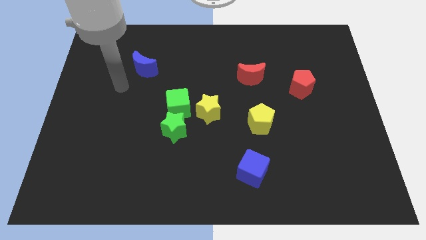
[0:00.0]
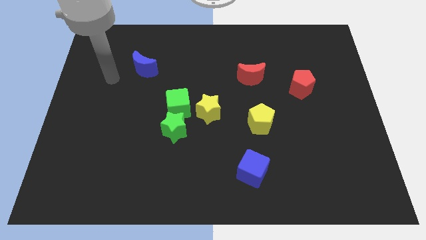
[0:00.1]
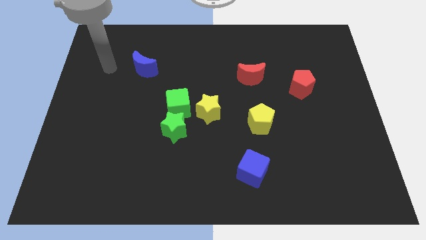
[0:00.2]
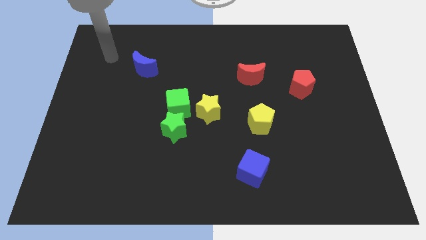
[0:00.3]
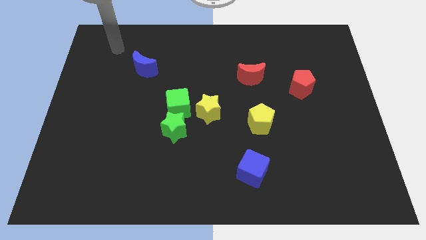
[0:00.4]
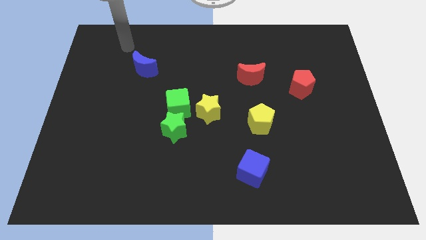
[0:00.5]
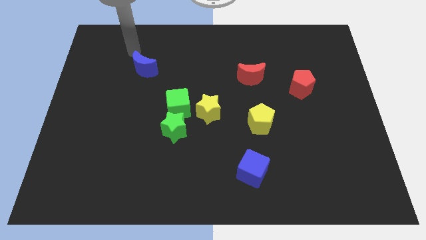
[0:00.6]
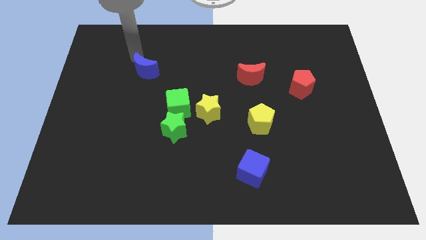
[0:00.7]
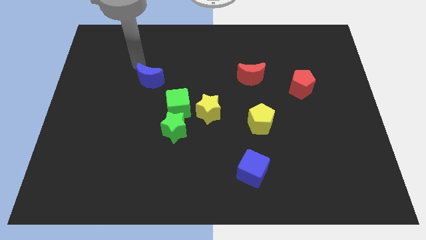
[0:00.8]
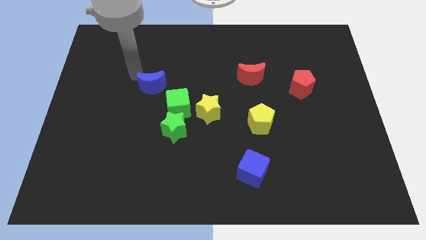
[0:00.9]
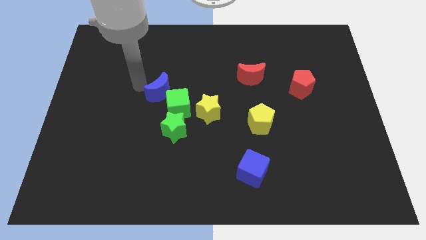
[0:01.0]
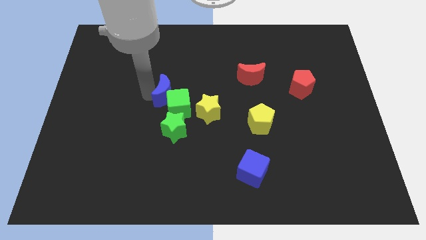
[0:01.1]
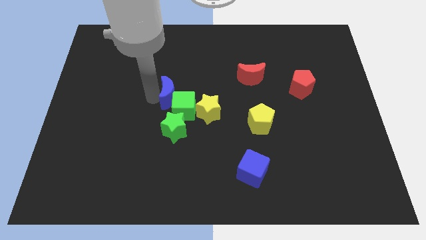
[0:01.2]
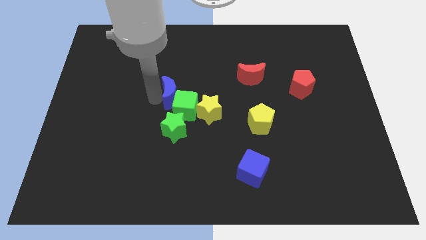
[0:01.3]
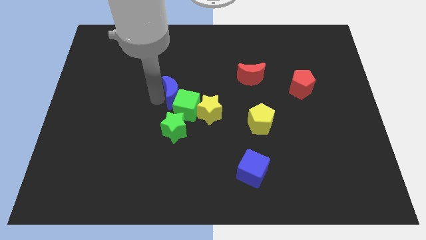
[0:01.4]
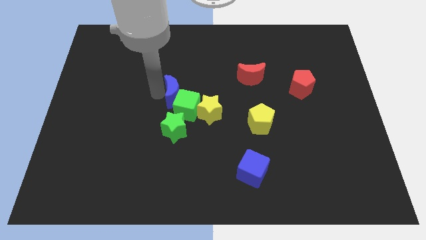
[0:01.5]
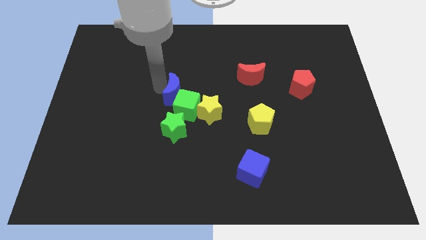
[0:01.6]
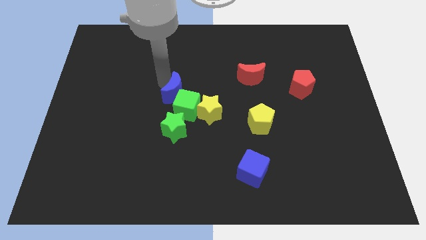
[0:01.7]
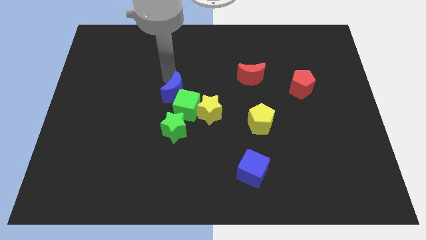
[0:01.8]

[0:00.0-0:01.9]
push the blue moon into the green cube

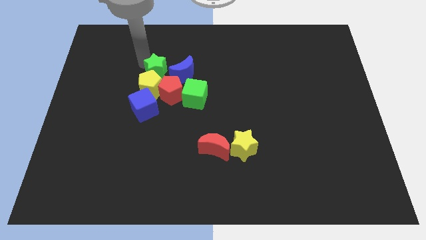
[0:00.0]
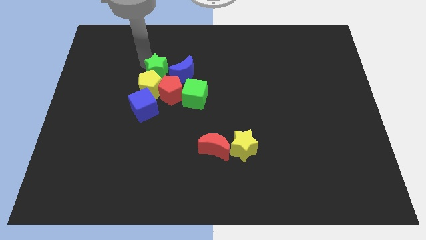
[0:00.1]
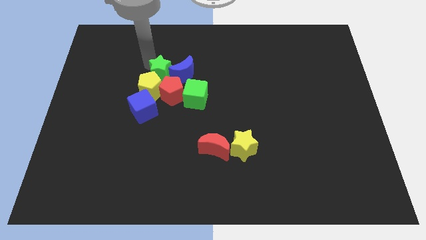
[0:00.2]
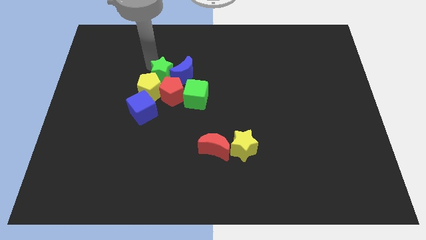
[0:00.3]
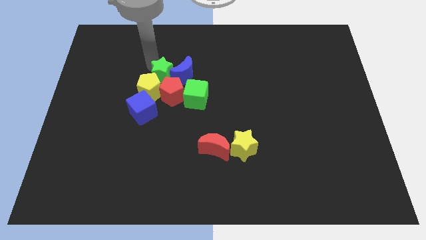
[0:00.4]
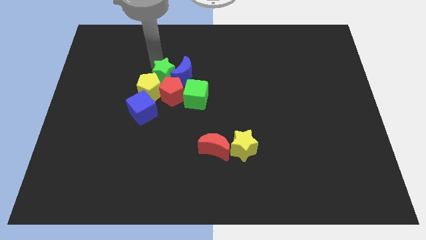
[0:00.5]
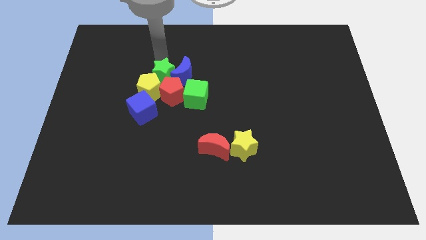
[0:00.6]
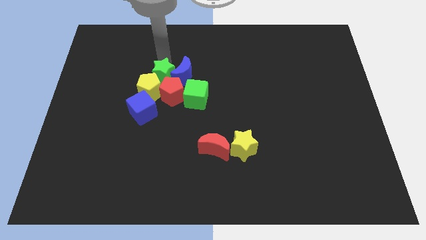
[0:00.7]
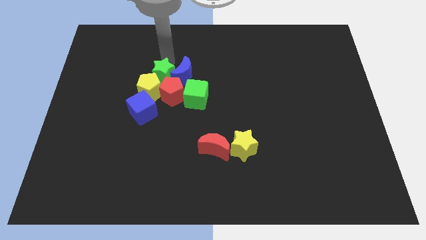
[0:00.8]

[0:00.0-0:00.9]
move the green star towards the top right of yellow pentagon

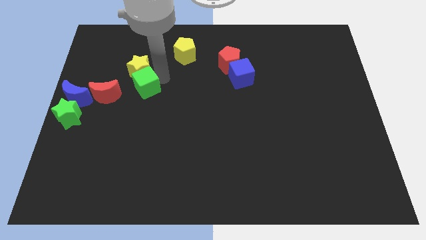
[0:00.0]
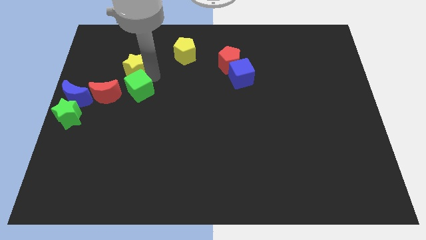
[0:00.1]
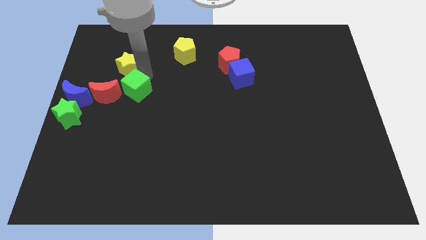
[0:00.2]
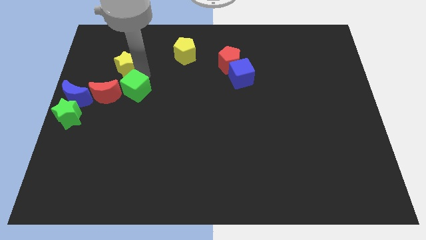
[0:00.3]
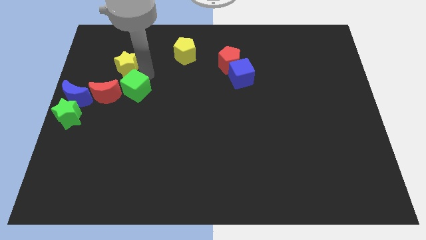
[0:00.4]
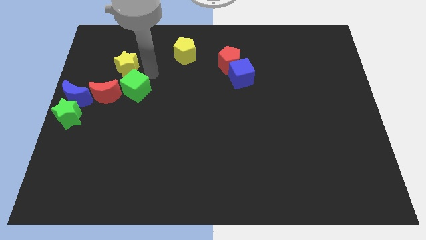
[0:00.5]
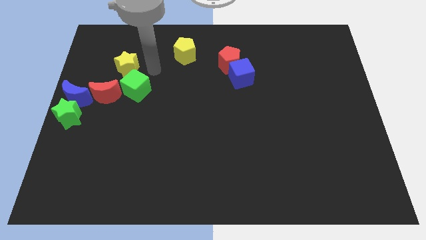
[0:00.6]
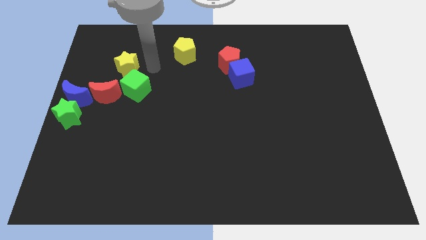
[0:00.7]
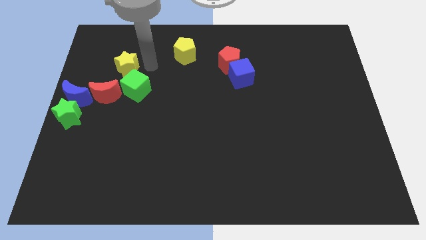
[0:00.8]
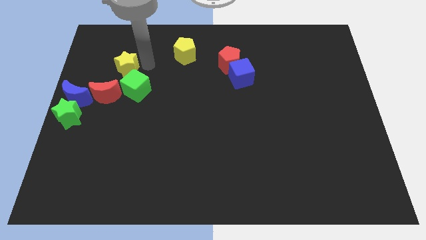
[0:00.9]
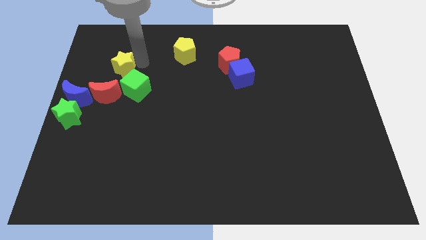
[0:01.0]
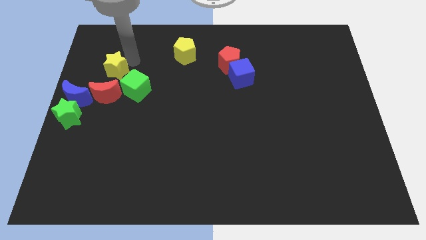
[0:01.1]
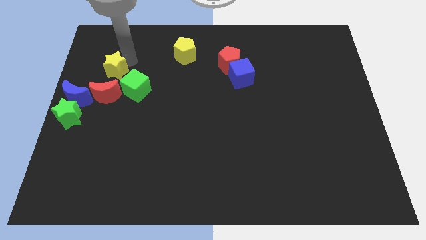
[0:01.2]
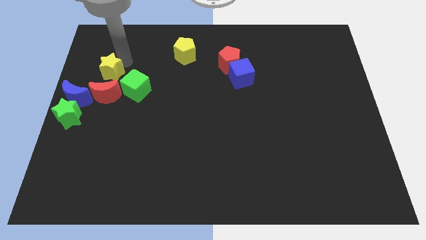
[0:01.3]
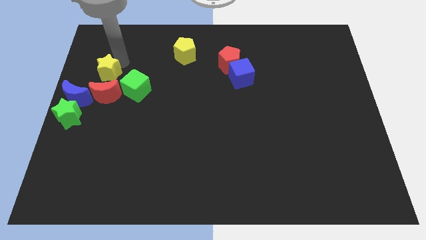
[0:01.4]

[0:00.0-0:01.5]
separate yellow star and green cube

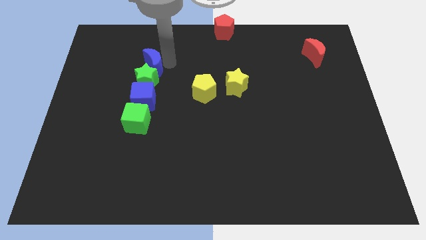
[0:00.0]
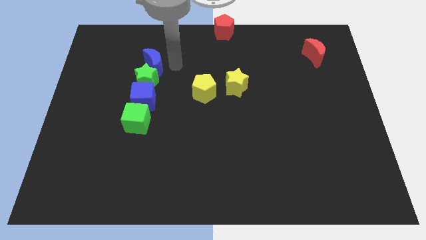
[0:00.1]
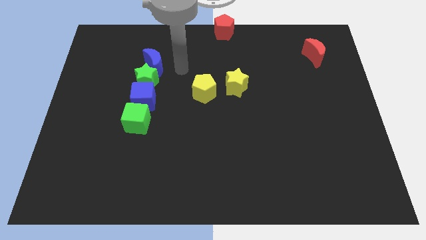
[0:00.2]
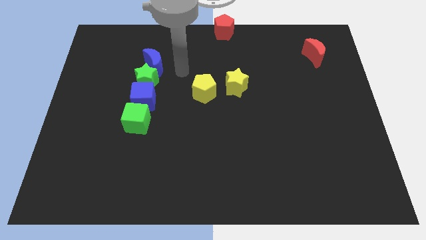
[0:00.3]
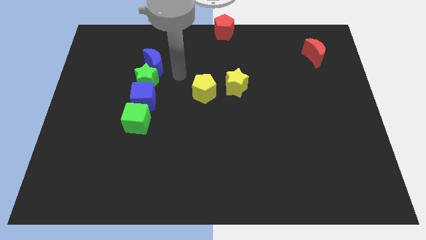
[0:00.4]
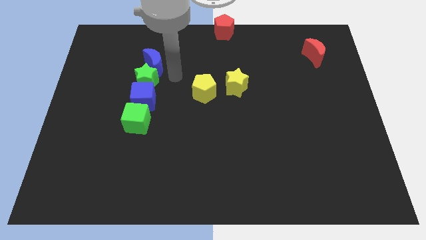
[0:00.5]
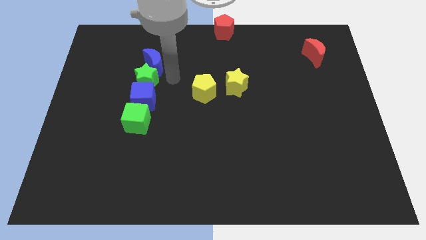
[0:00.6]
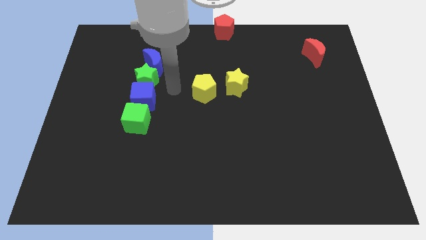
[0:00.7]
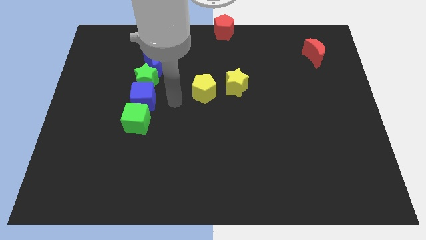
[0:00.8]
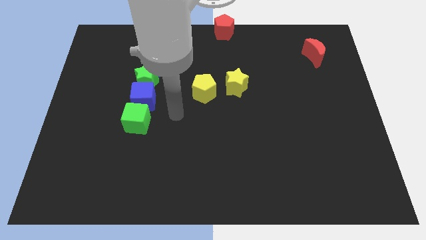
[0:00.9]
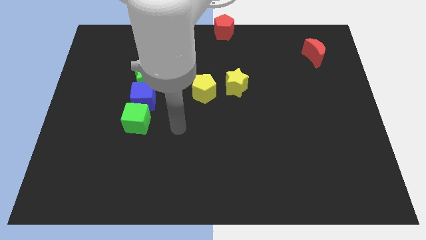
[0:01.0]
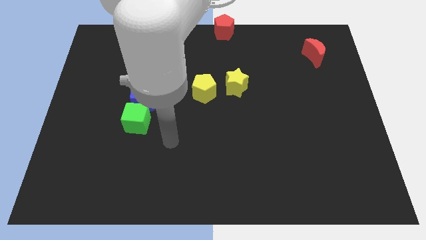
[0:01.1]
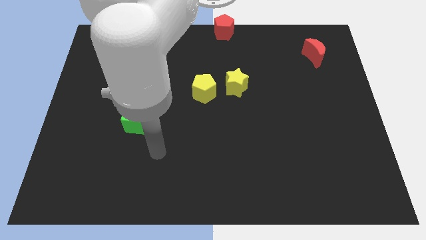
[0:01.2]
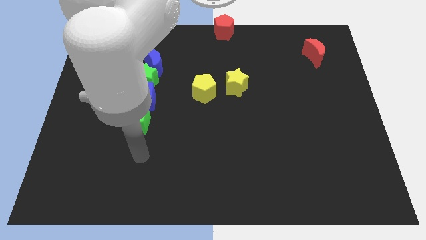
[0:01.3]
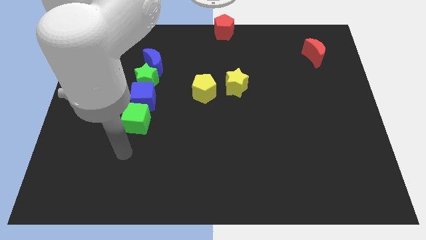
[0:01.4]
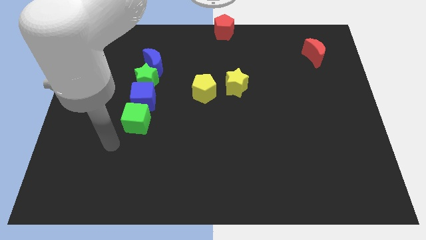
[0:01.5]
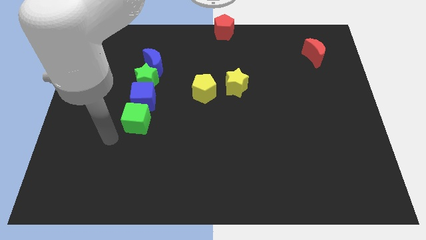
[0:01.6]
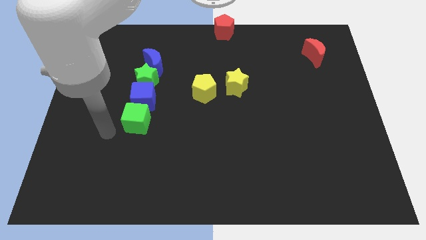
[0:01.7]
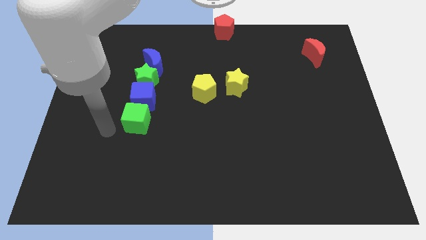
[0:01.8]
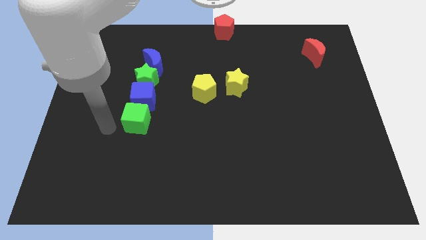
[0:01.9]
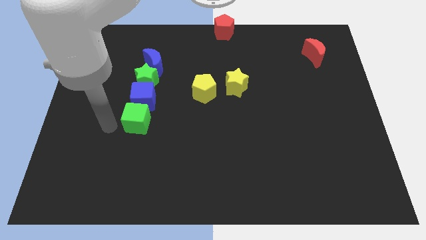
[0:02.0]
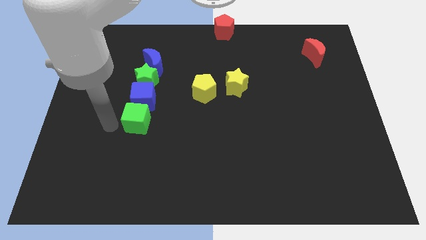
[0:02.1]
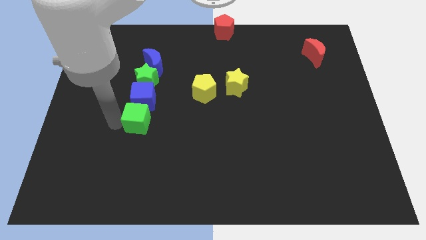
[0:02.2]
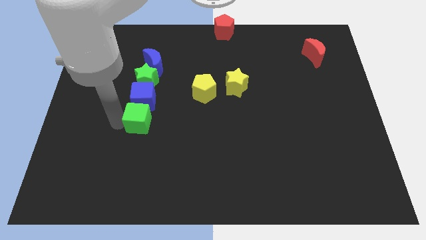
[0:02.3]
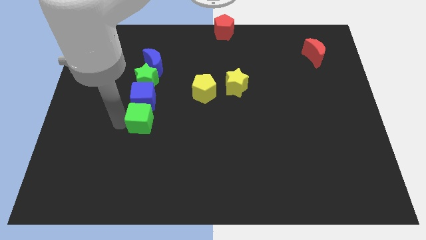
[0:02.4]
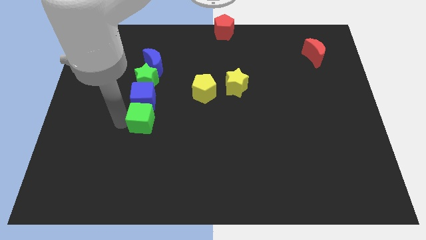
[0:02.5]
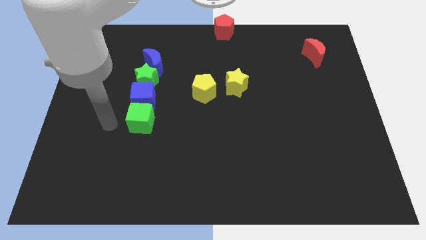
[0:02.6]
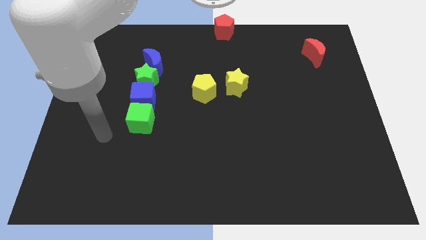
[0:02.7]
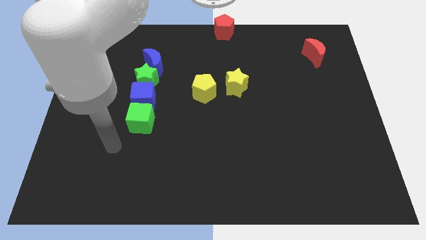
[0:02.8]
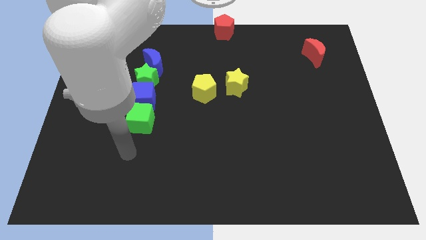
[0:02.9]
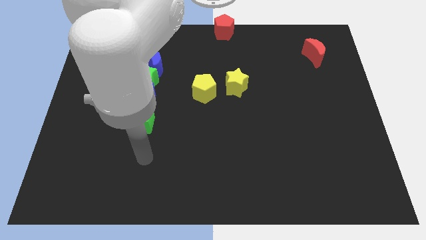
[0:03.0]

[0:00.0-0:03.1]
adjust the green cube at the bottom side of the blue cube

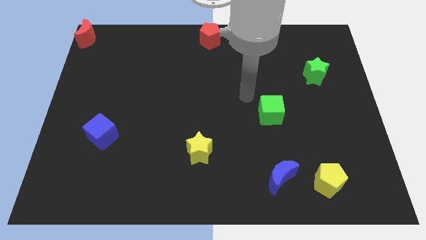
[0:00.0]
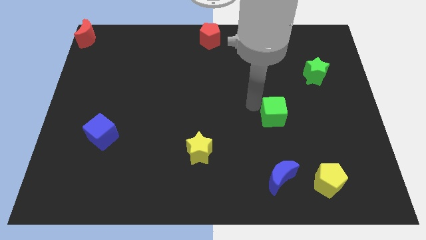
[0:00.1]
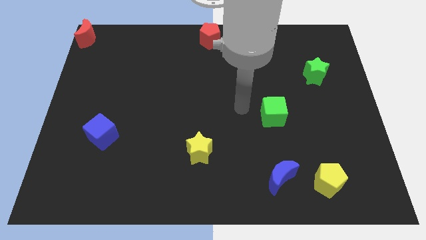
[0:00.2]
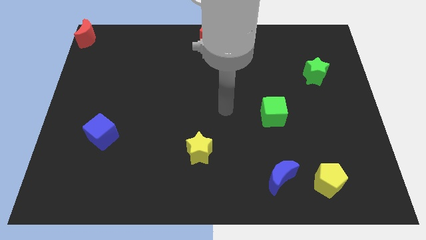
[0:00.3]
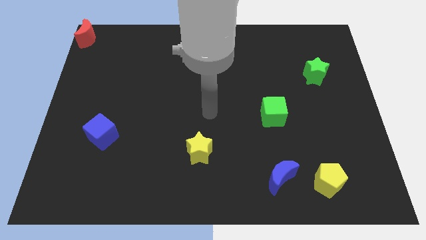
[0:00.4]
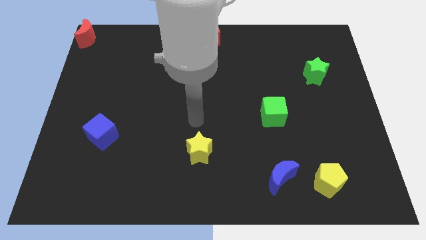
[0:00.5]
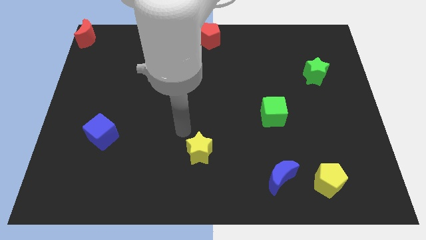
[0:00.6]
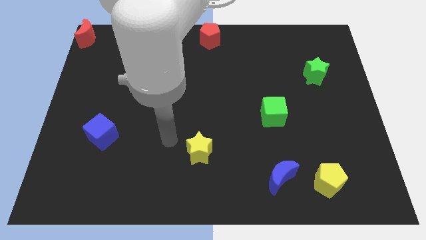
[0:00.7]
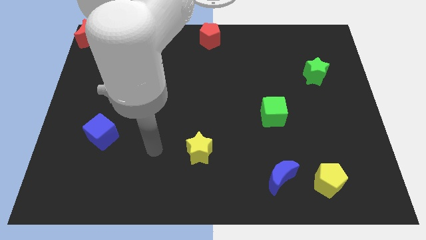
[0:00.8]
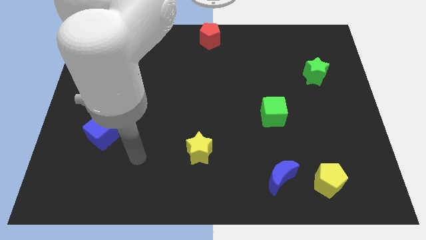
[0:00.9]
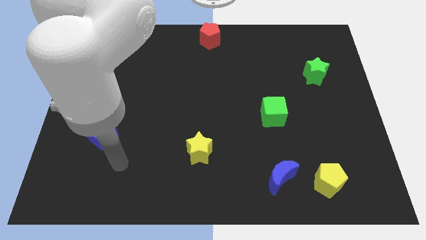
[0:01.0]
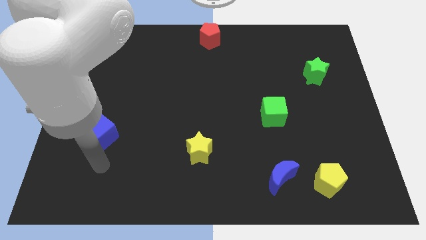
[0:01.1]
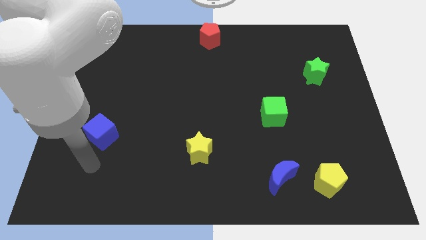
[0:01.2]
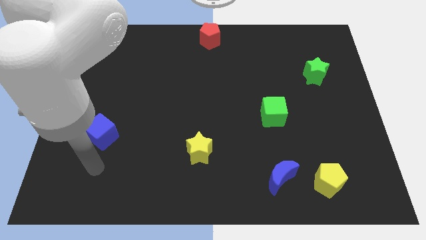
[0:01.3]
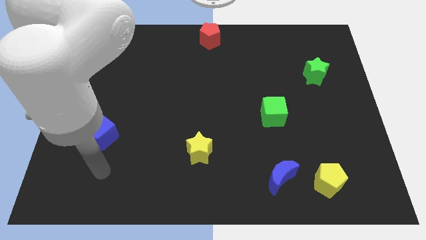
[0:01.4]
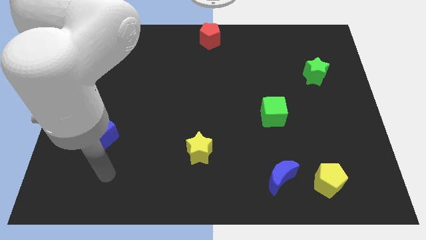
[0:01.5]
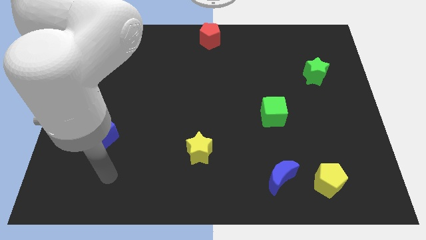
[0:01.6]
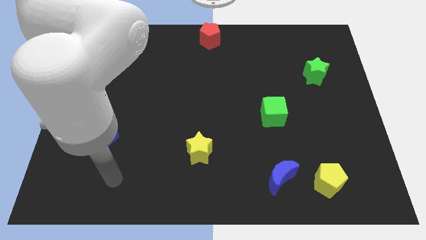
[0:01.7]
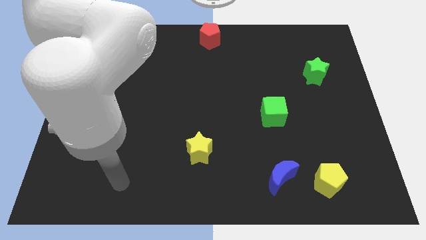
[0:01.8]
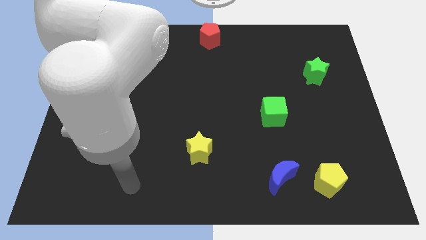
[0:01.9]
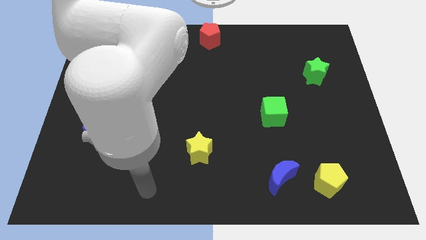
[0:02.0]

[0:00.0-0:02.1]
move your arm away from the green cube
